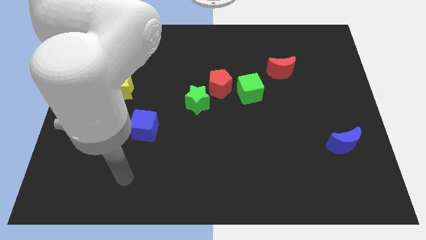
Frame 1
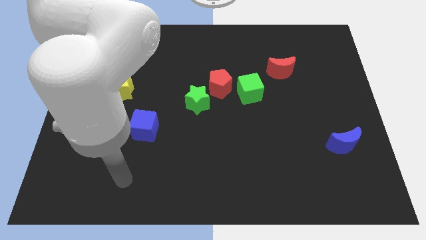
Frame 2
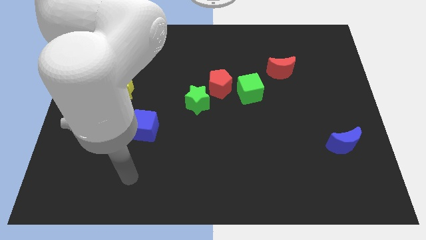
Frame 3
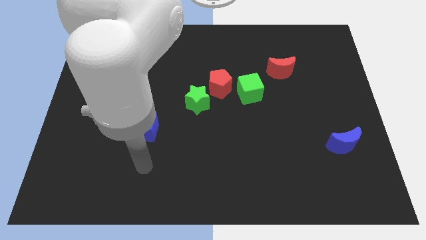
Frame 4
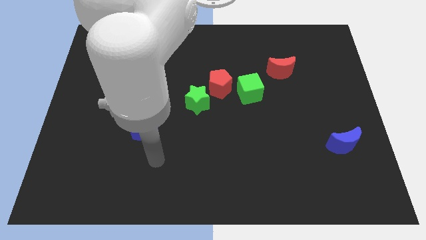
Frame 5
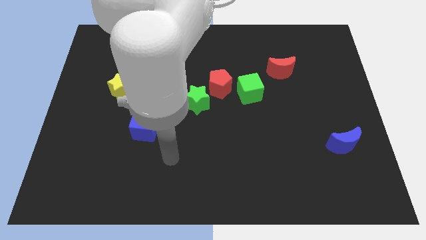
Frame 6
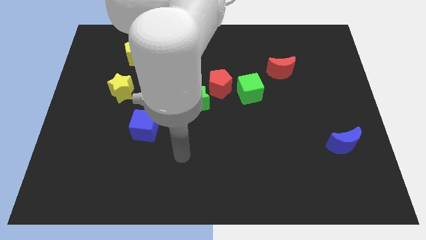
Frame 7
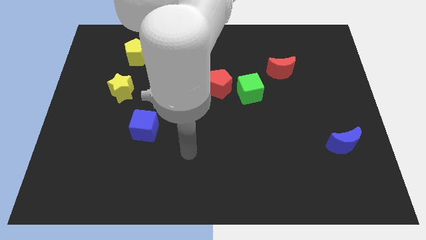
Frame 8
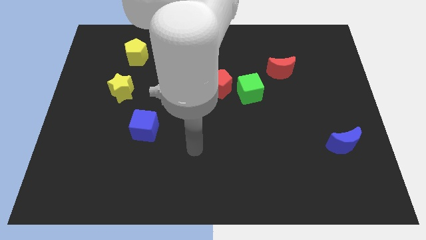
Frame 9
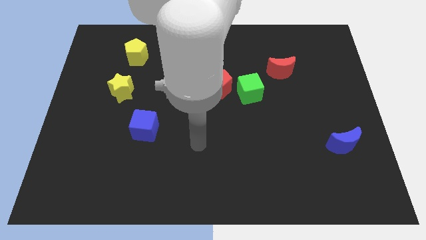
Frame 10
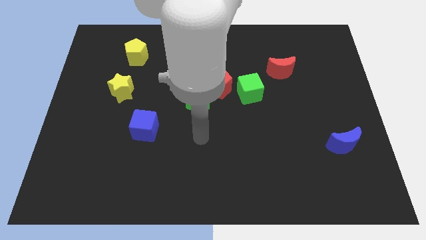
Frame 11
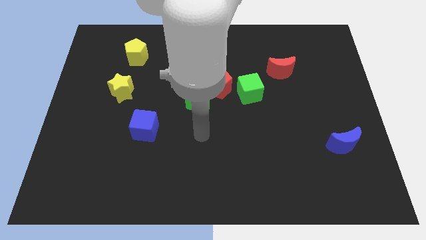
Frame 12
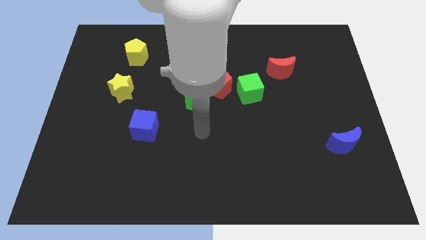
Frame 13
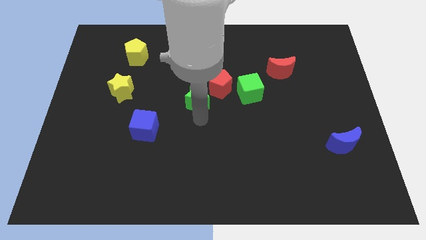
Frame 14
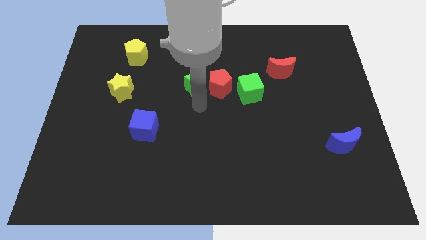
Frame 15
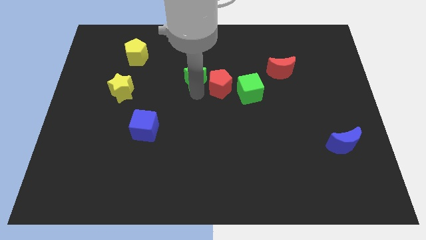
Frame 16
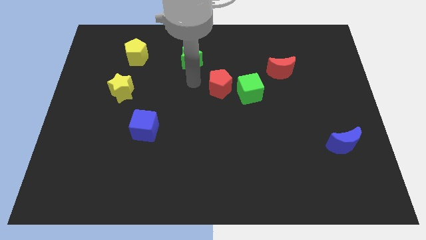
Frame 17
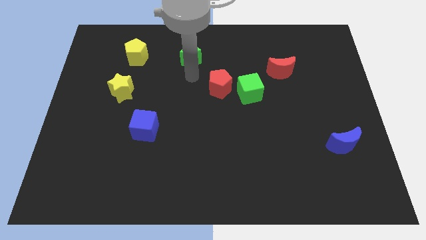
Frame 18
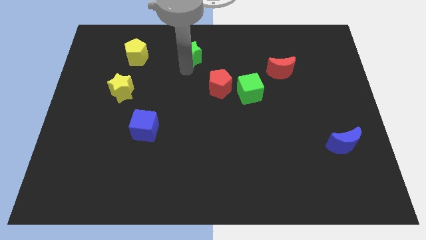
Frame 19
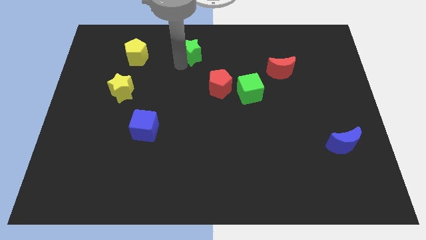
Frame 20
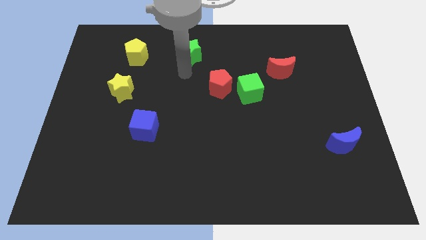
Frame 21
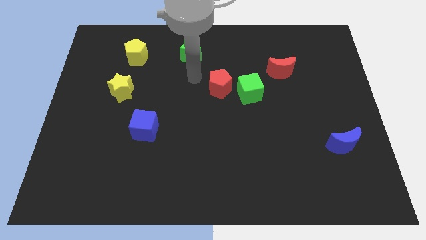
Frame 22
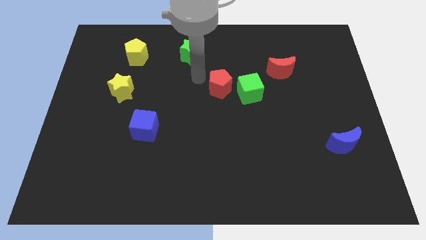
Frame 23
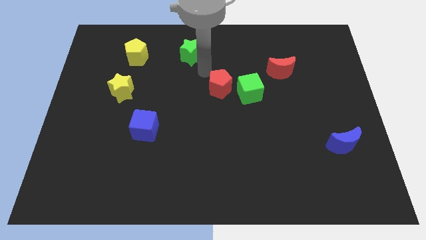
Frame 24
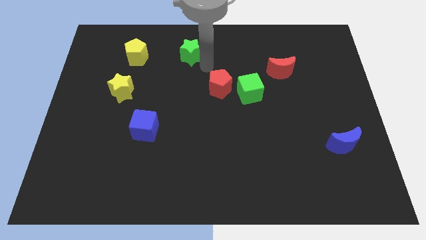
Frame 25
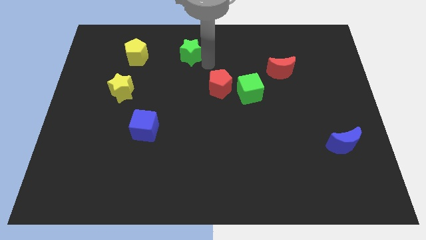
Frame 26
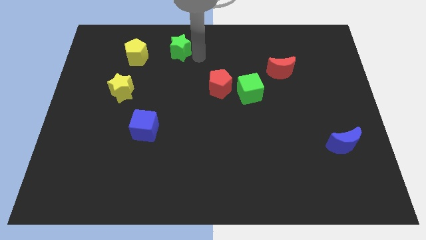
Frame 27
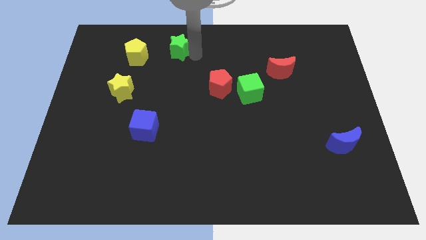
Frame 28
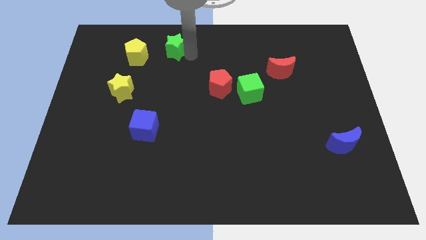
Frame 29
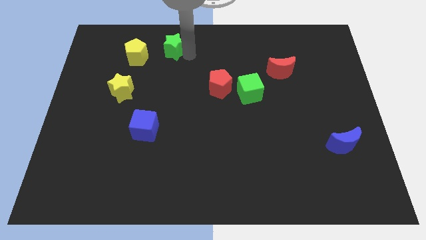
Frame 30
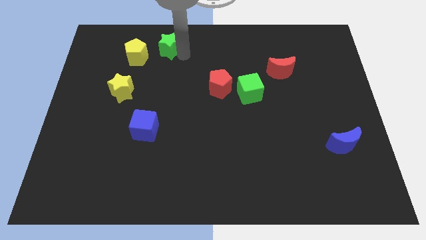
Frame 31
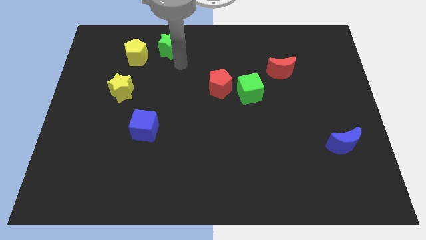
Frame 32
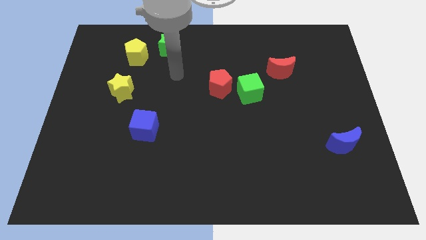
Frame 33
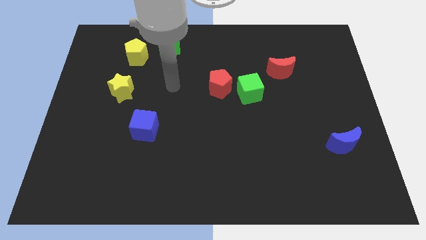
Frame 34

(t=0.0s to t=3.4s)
place the green star to the right side of the yellow pentagon

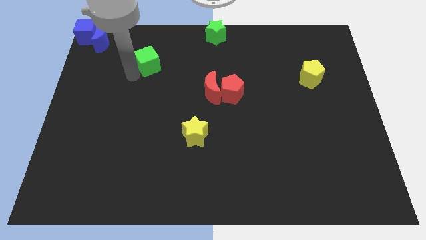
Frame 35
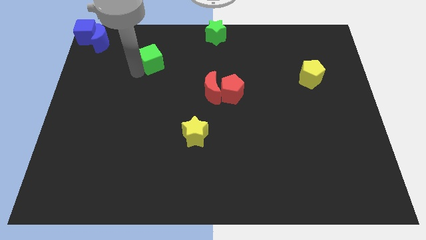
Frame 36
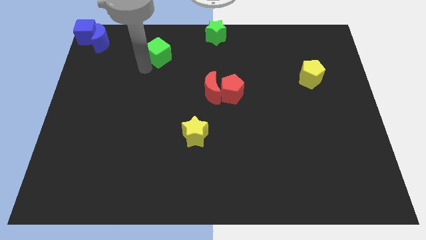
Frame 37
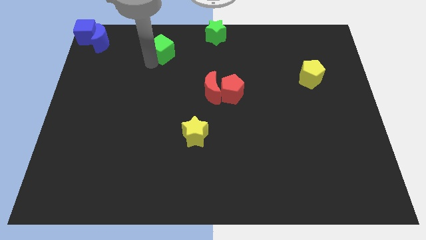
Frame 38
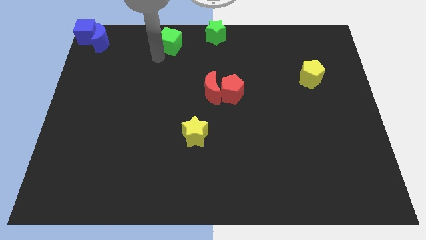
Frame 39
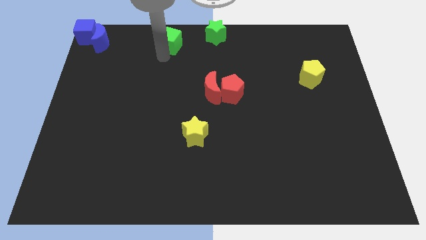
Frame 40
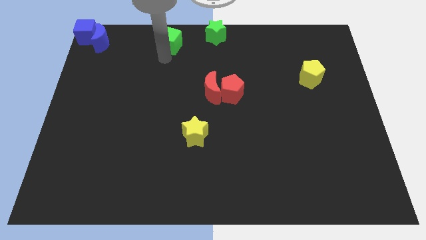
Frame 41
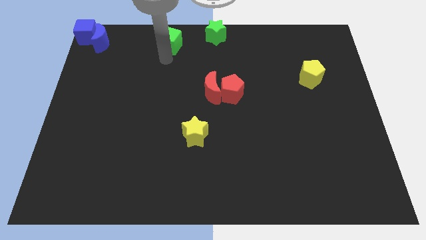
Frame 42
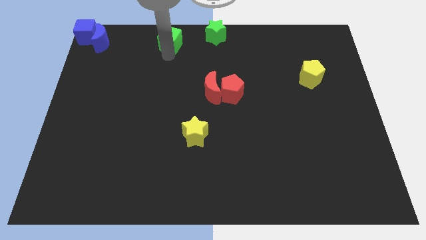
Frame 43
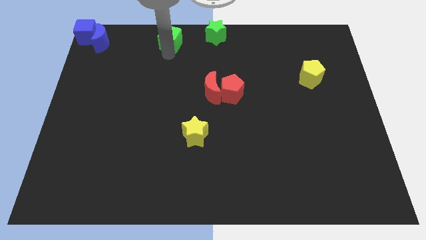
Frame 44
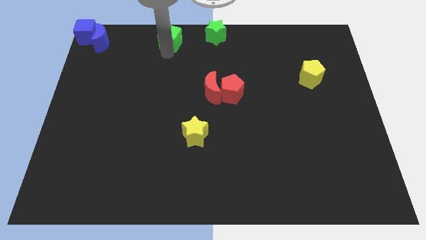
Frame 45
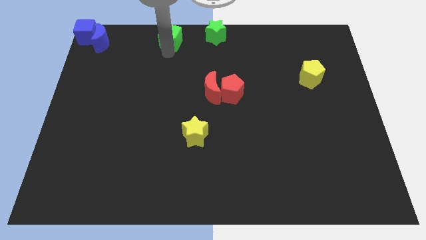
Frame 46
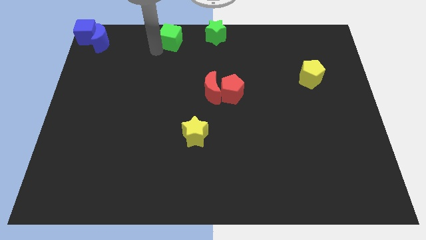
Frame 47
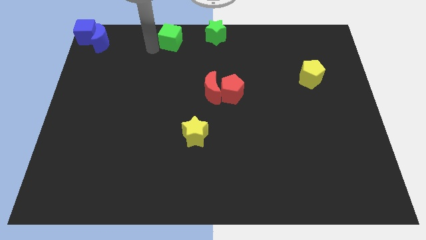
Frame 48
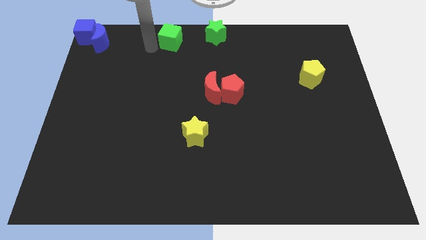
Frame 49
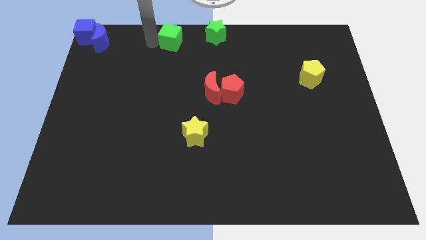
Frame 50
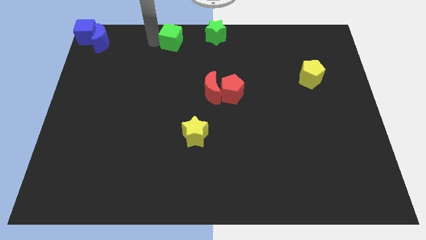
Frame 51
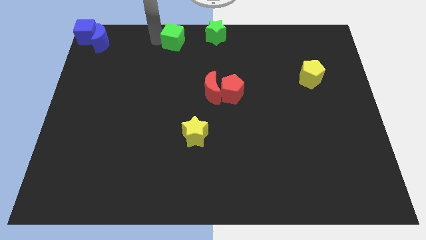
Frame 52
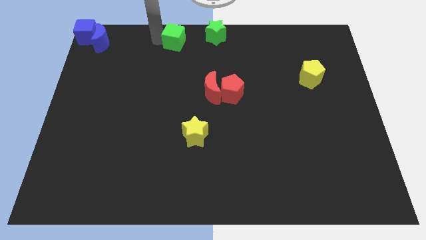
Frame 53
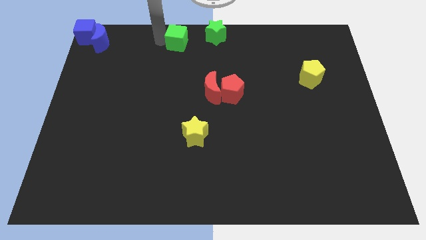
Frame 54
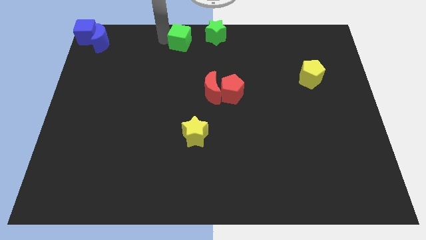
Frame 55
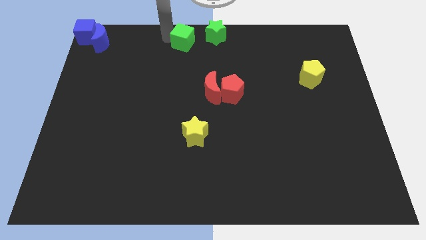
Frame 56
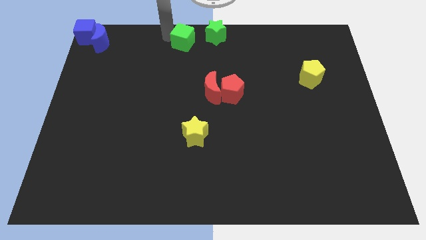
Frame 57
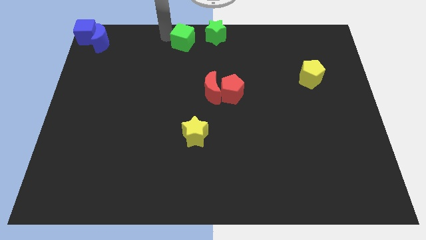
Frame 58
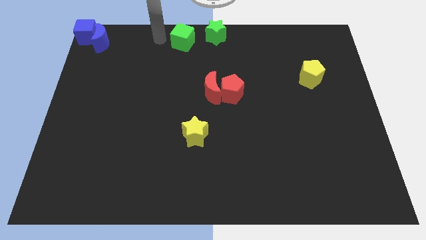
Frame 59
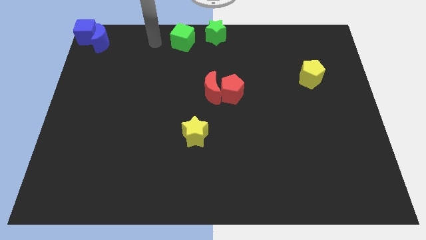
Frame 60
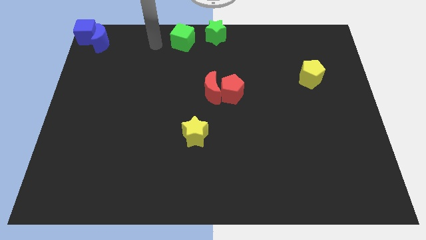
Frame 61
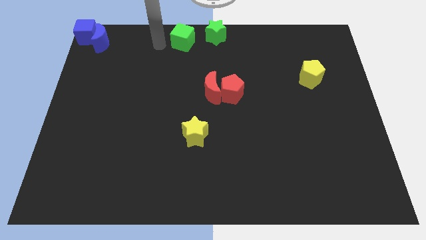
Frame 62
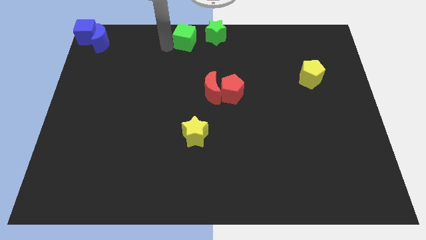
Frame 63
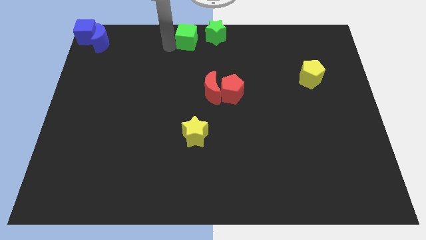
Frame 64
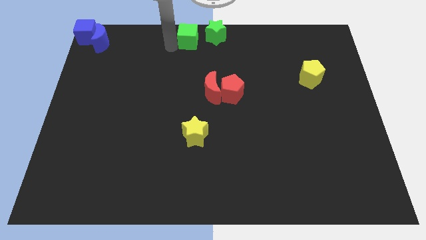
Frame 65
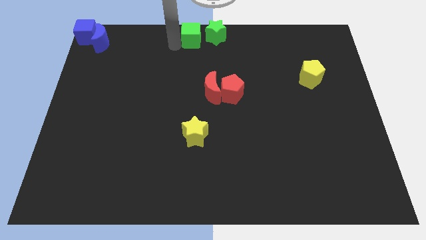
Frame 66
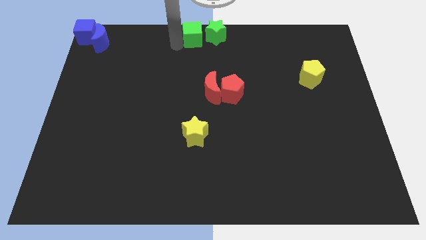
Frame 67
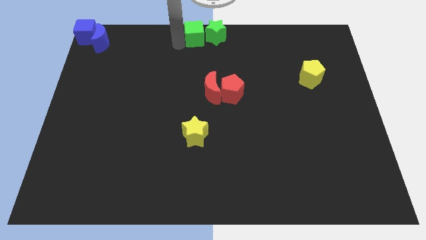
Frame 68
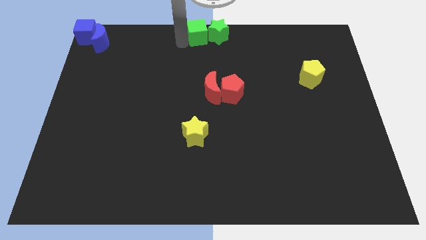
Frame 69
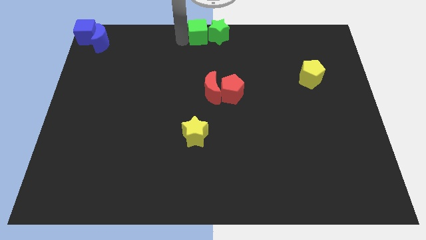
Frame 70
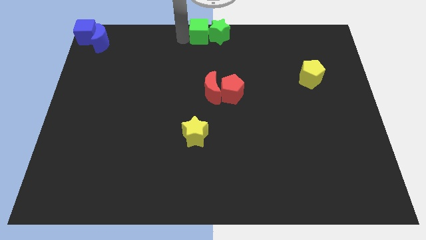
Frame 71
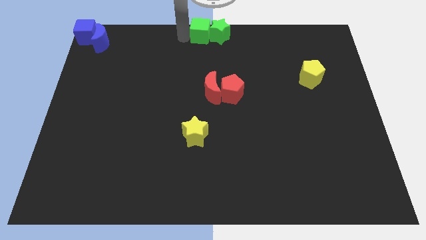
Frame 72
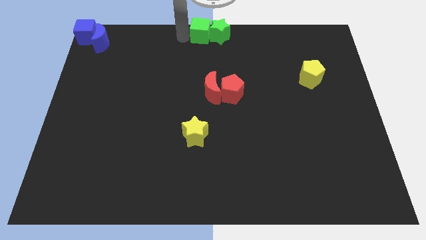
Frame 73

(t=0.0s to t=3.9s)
push the green cube left to the green star

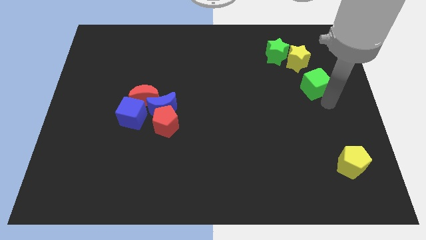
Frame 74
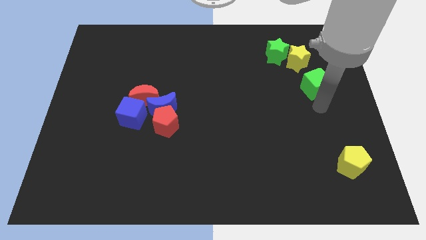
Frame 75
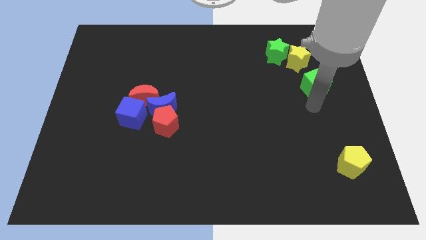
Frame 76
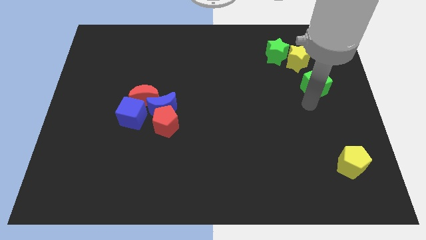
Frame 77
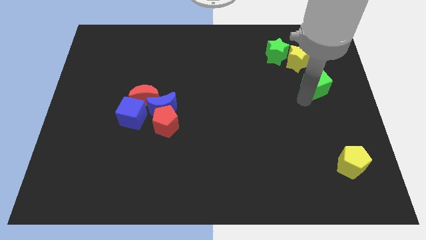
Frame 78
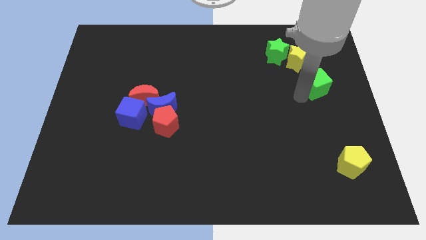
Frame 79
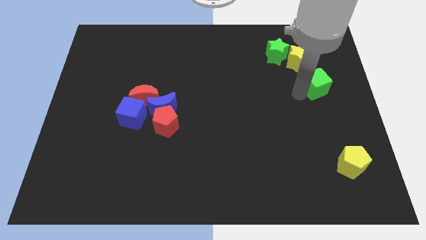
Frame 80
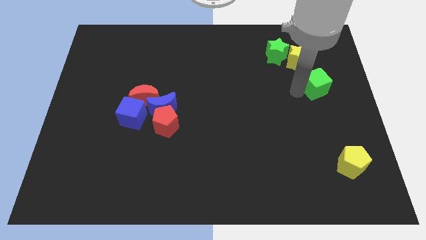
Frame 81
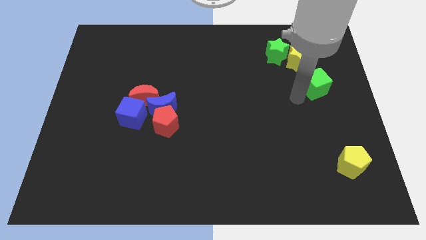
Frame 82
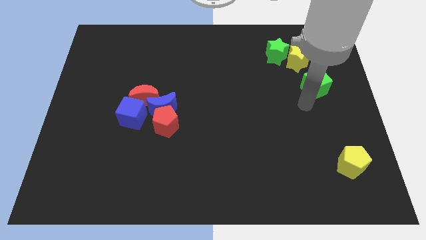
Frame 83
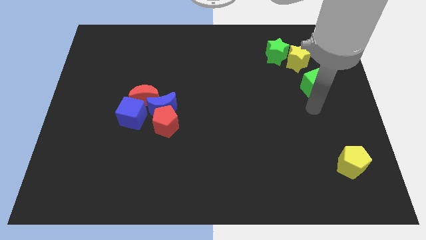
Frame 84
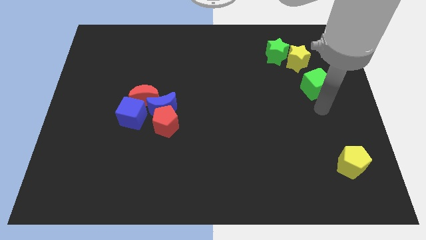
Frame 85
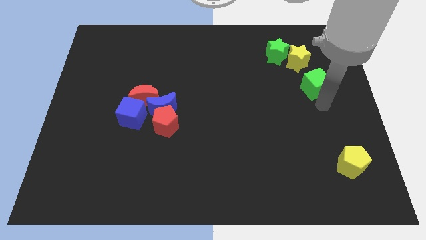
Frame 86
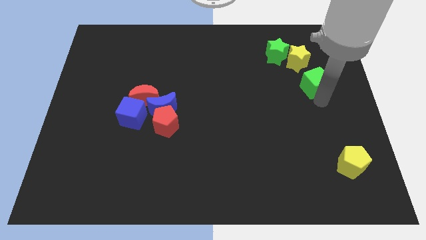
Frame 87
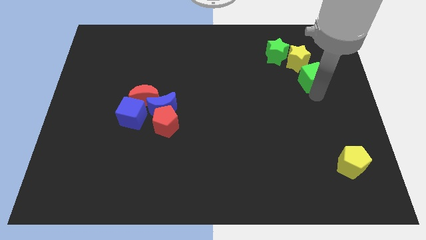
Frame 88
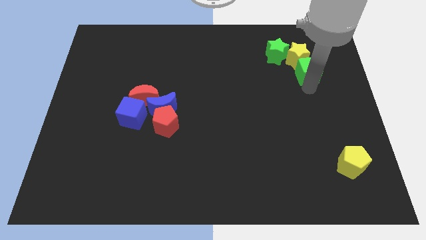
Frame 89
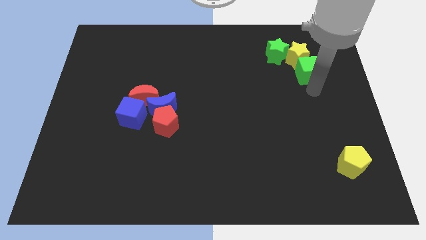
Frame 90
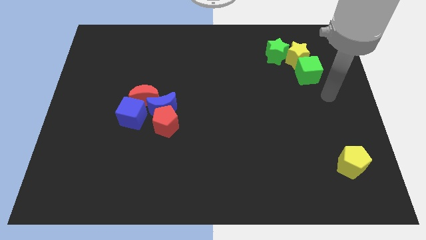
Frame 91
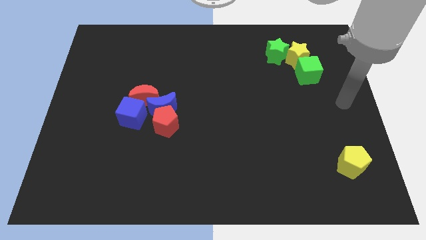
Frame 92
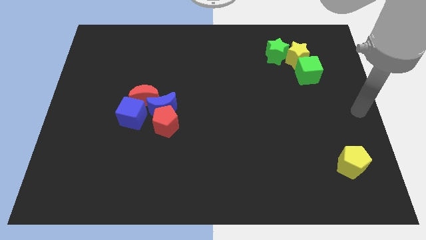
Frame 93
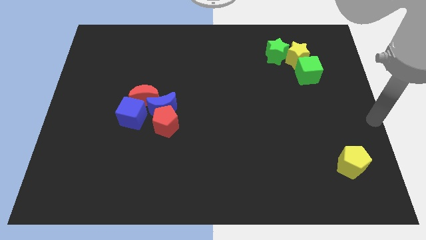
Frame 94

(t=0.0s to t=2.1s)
move green cube into yellow star
